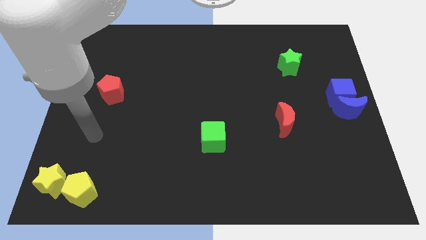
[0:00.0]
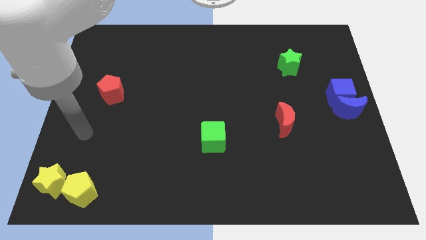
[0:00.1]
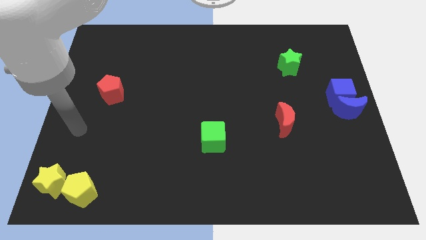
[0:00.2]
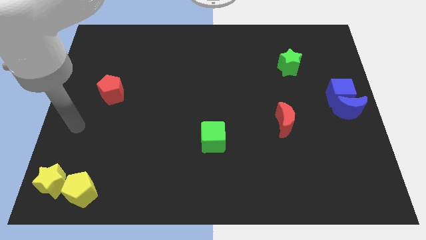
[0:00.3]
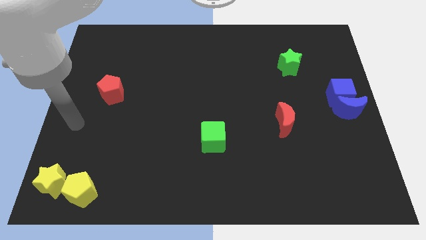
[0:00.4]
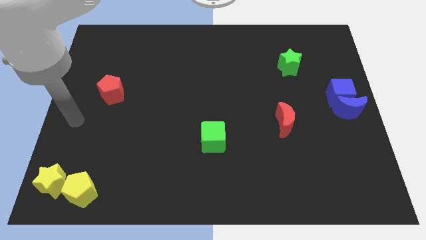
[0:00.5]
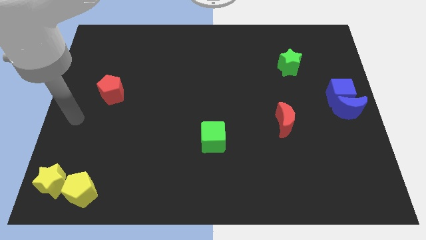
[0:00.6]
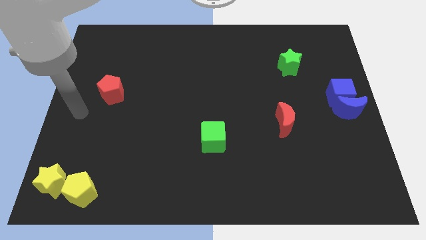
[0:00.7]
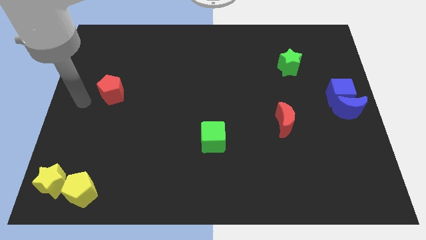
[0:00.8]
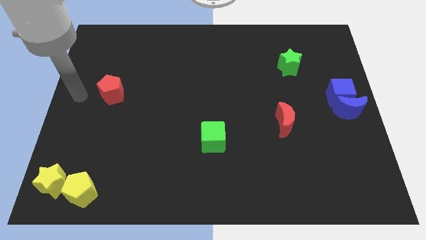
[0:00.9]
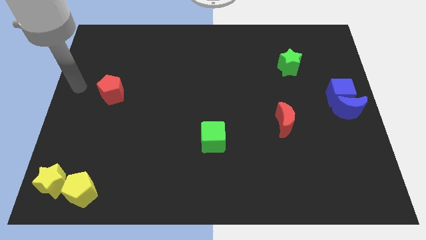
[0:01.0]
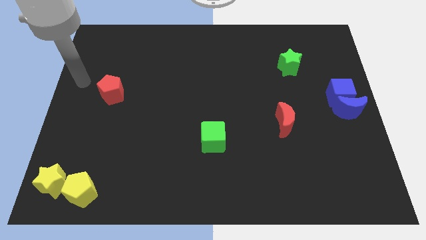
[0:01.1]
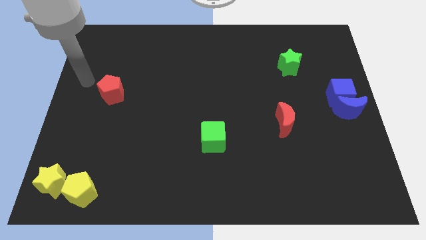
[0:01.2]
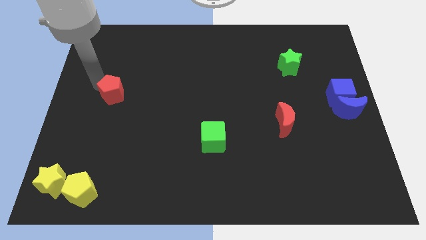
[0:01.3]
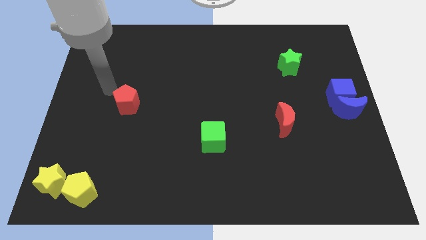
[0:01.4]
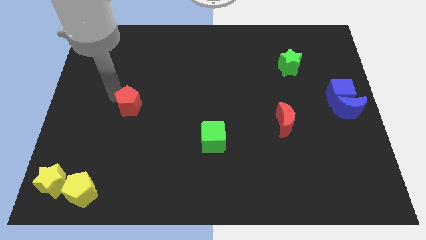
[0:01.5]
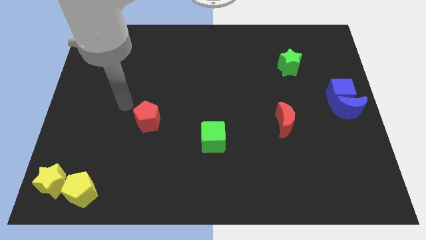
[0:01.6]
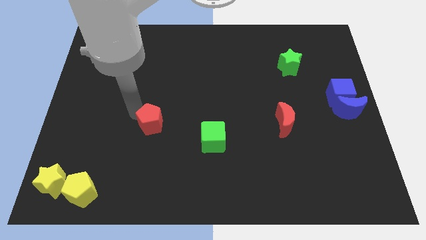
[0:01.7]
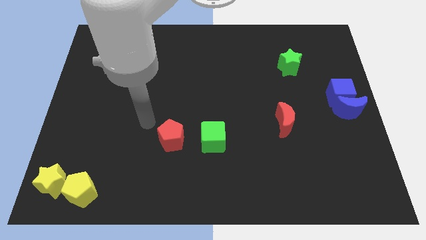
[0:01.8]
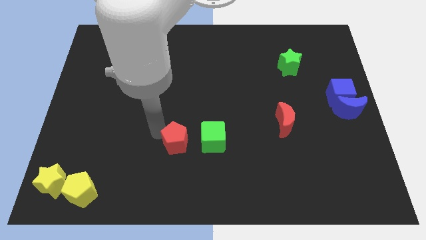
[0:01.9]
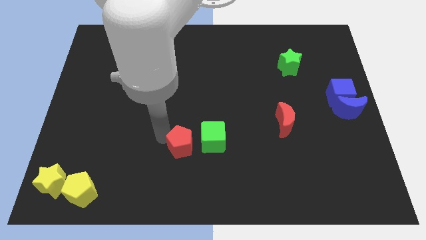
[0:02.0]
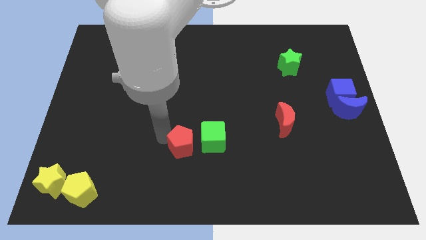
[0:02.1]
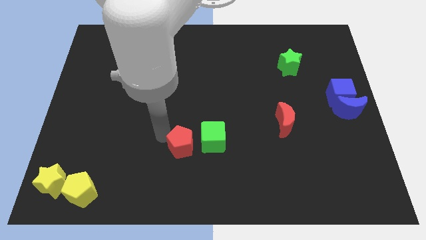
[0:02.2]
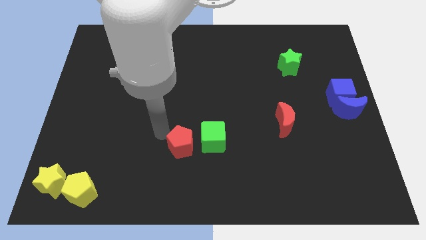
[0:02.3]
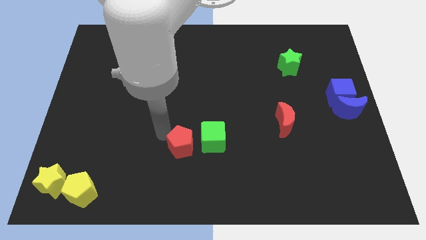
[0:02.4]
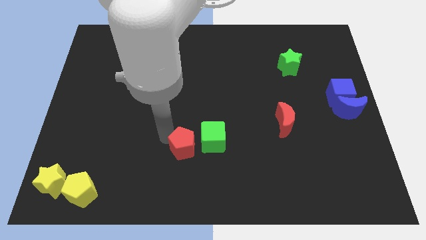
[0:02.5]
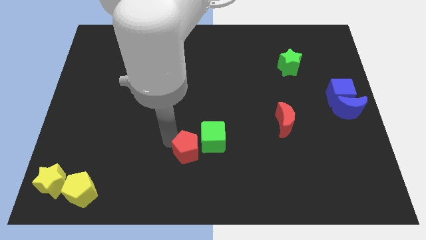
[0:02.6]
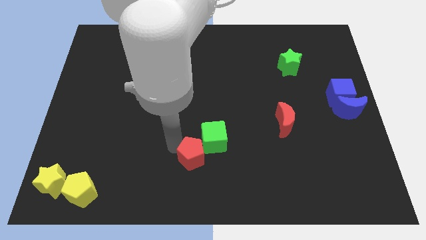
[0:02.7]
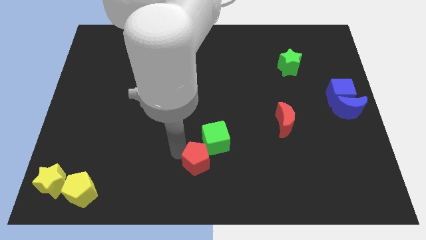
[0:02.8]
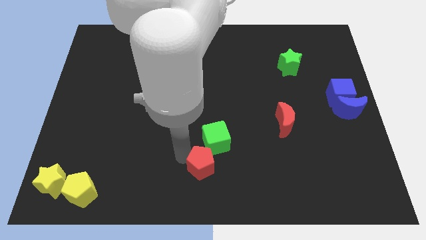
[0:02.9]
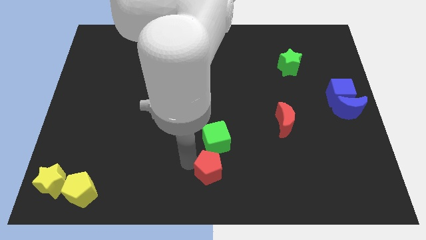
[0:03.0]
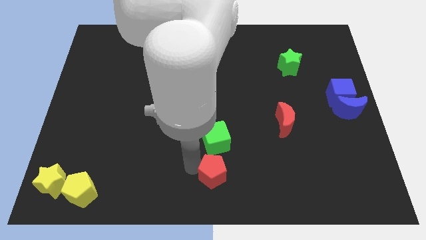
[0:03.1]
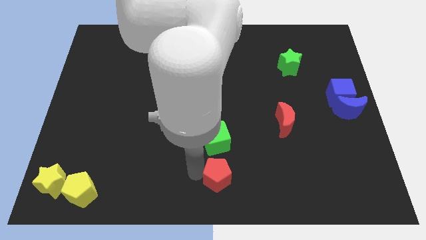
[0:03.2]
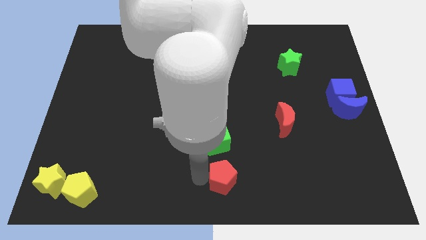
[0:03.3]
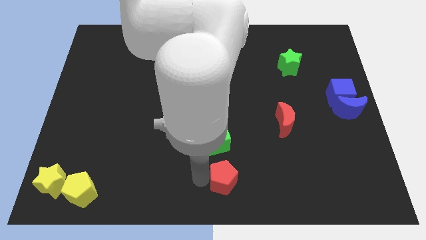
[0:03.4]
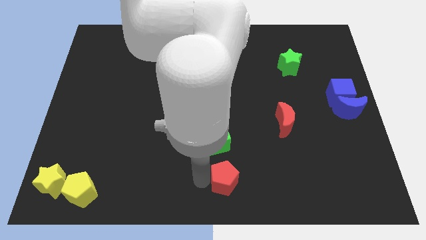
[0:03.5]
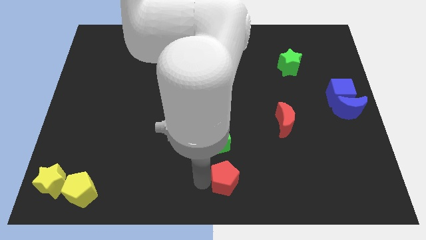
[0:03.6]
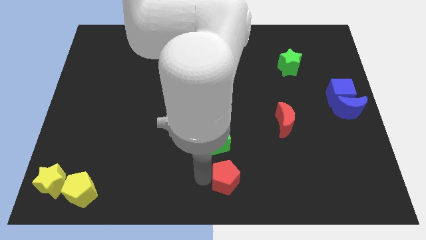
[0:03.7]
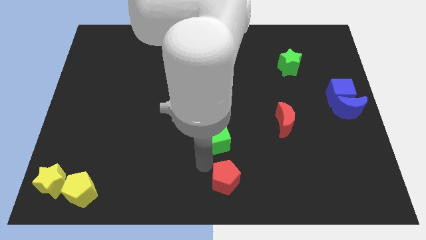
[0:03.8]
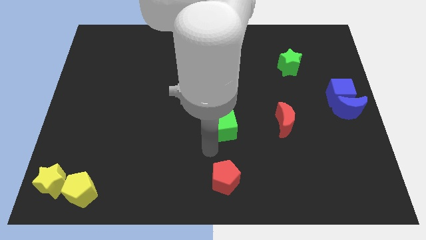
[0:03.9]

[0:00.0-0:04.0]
push red pentagon to the center

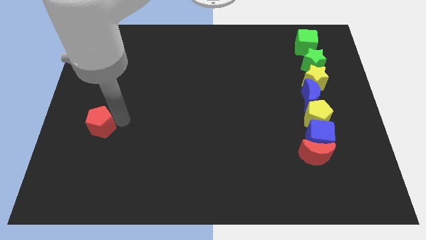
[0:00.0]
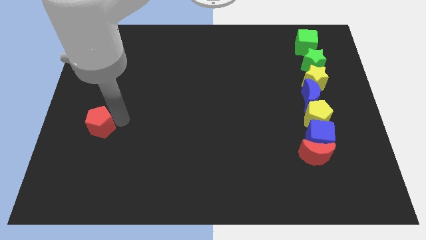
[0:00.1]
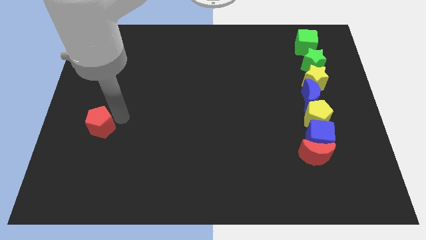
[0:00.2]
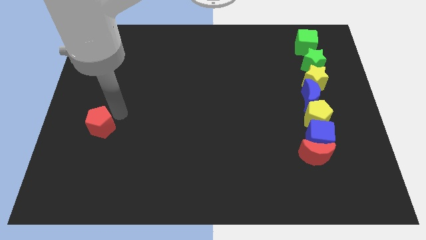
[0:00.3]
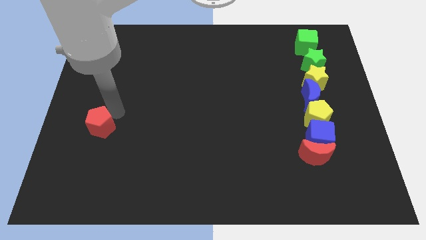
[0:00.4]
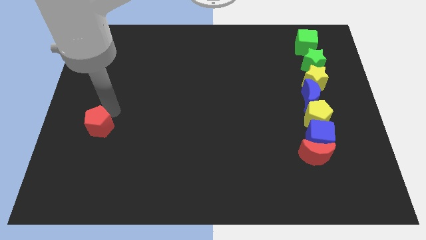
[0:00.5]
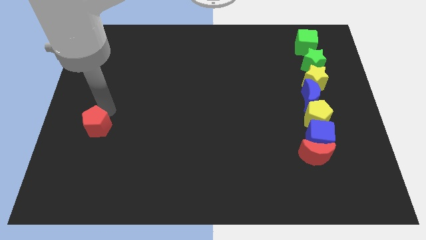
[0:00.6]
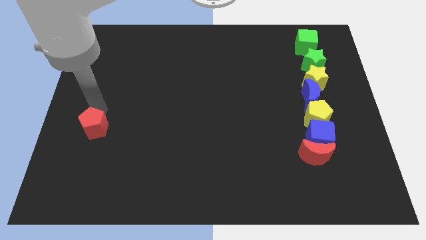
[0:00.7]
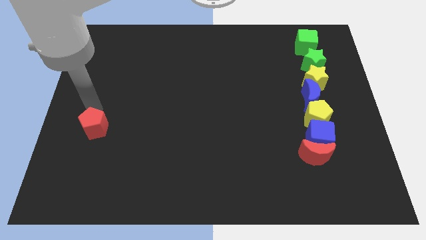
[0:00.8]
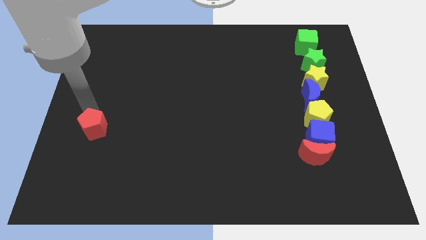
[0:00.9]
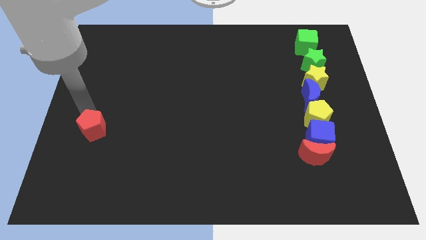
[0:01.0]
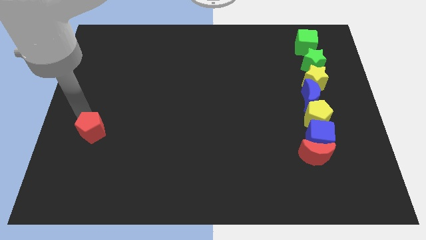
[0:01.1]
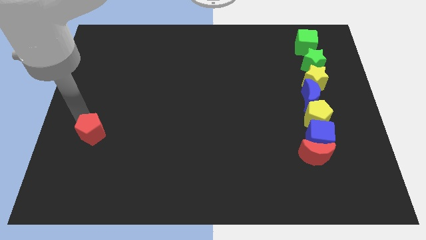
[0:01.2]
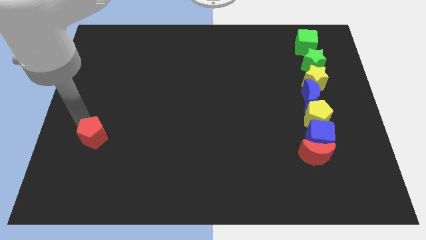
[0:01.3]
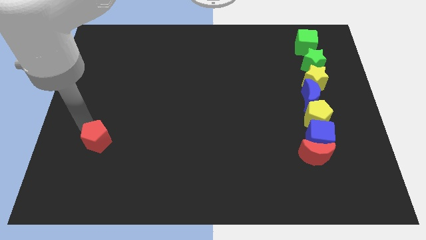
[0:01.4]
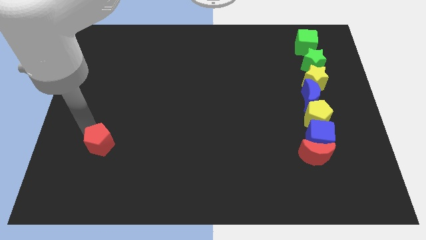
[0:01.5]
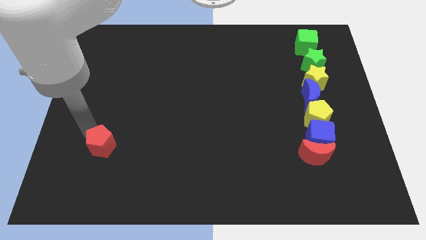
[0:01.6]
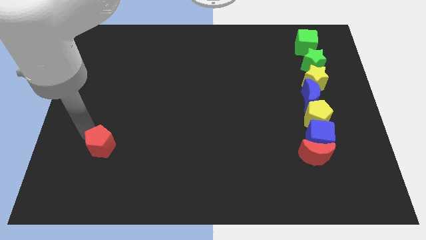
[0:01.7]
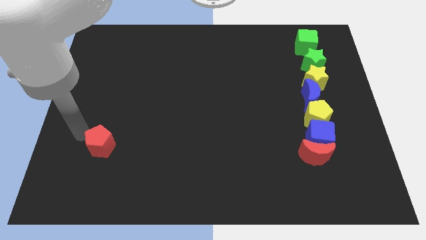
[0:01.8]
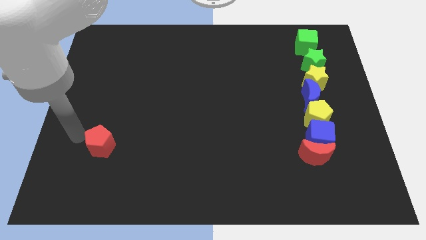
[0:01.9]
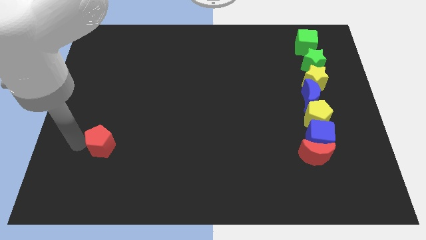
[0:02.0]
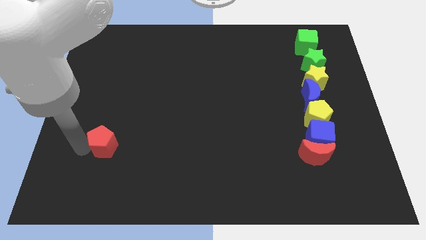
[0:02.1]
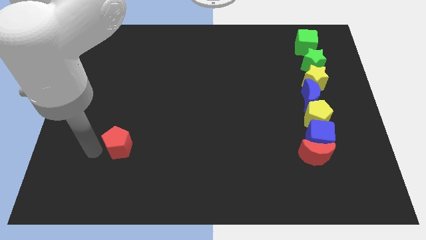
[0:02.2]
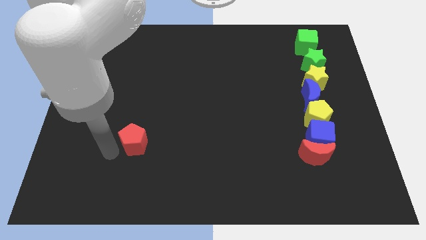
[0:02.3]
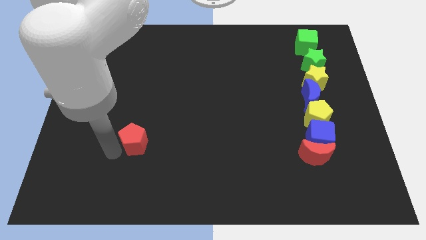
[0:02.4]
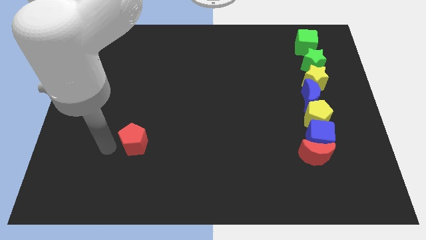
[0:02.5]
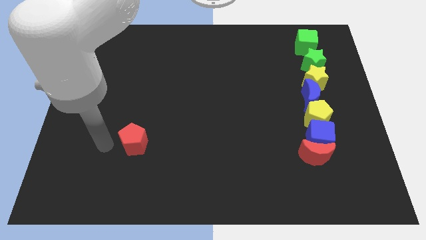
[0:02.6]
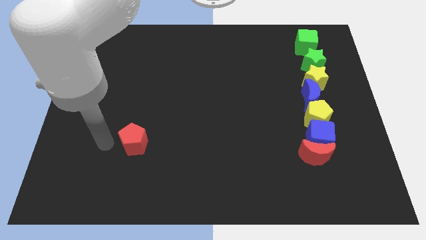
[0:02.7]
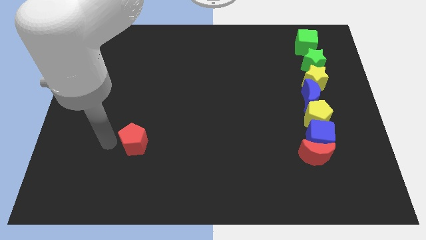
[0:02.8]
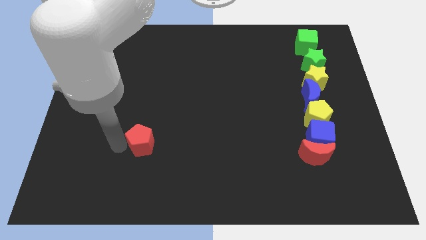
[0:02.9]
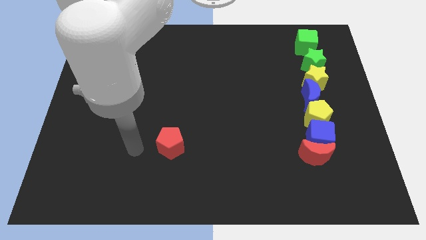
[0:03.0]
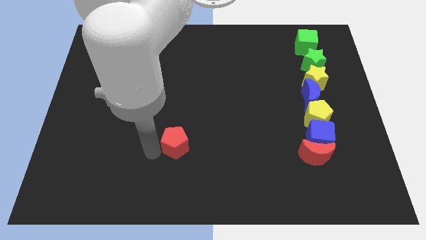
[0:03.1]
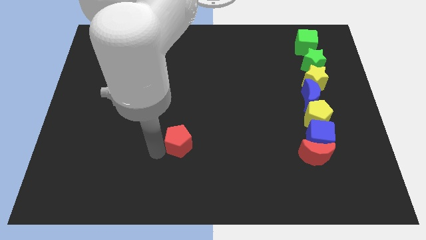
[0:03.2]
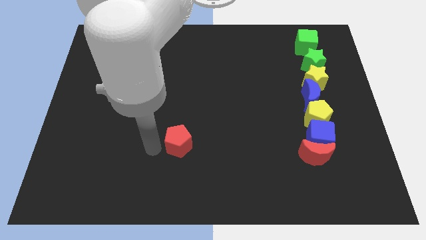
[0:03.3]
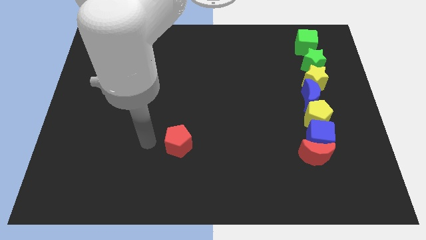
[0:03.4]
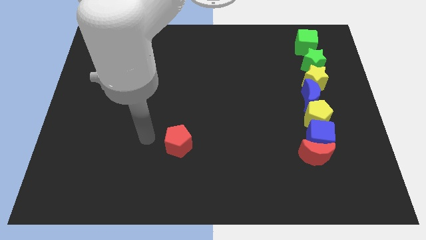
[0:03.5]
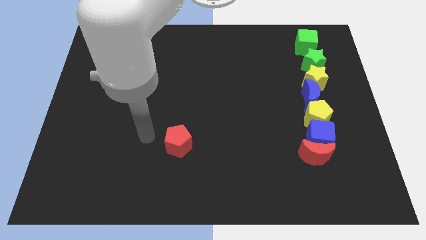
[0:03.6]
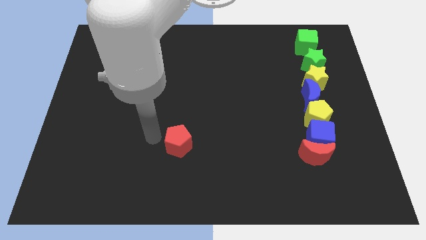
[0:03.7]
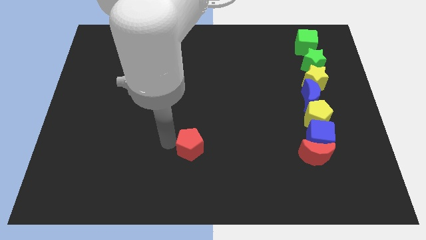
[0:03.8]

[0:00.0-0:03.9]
push the red pentagon towards the right of the board

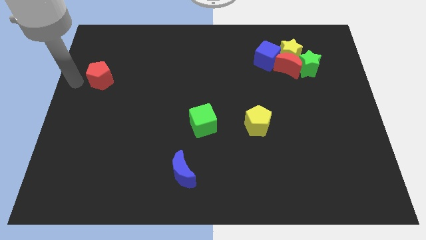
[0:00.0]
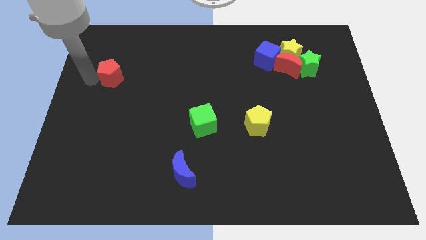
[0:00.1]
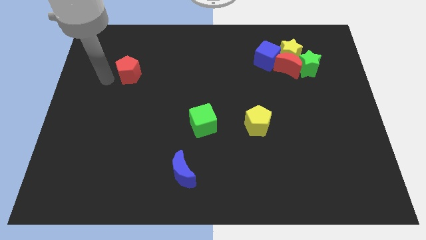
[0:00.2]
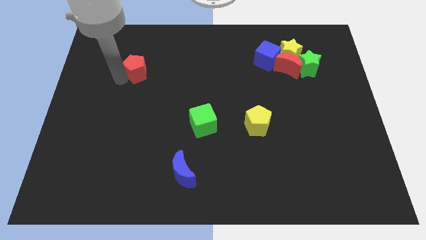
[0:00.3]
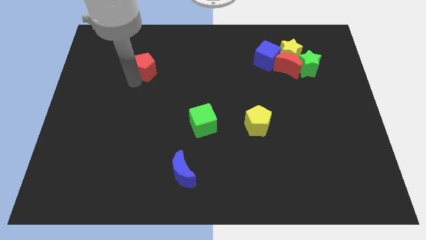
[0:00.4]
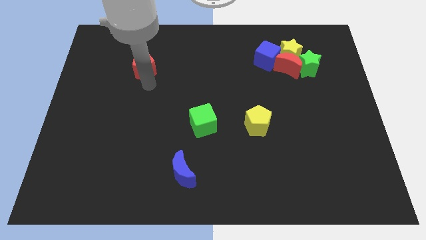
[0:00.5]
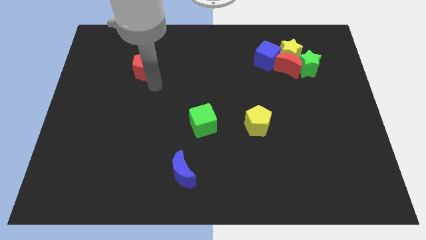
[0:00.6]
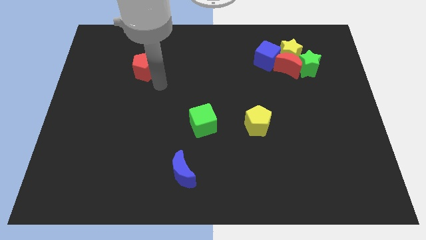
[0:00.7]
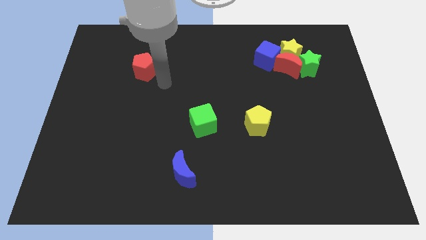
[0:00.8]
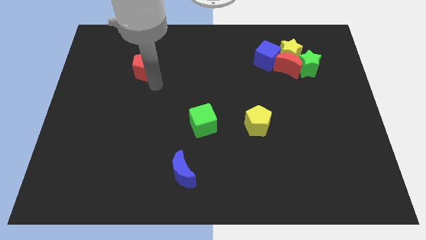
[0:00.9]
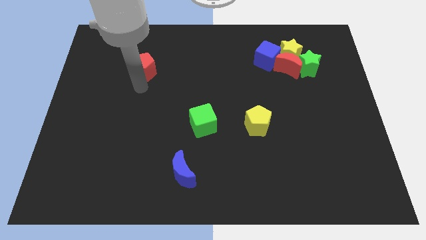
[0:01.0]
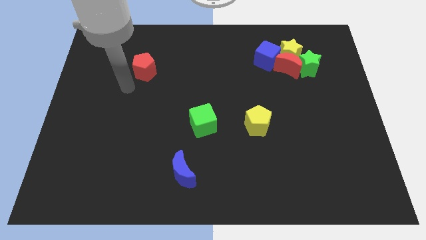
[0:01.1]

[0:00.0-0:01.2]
push the red pentagon a bit towards the top
